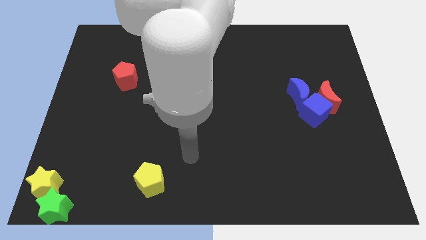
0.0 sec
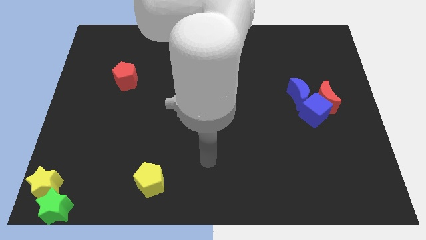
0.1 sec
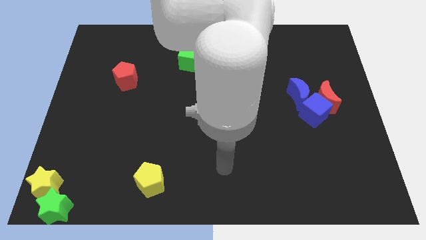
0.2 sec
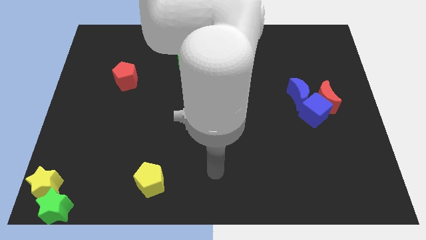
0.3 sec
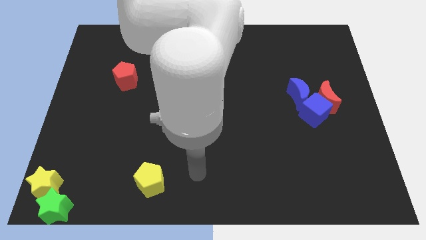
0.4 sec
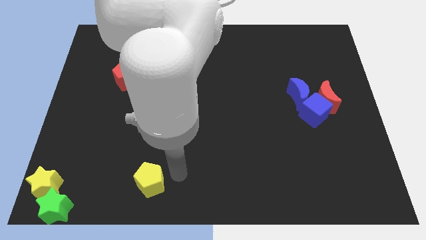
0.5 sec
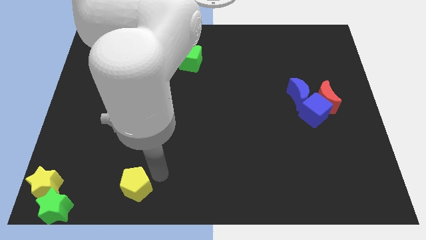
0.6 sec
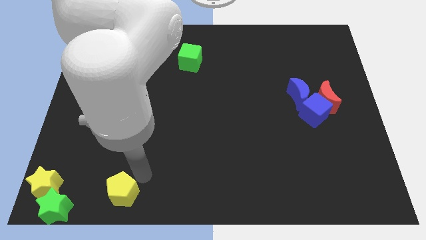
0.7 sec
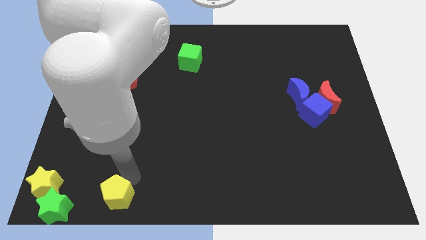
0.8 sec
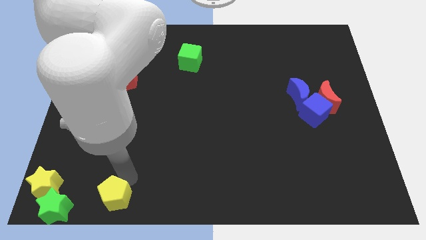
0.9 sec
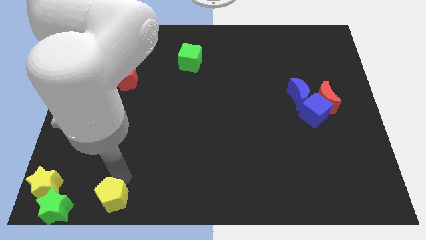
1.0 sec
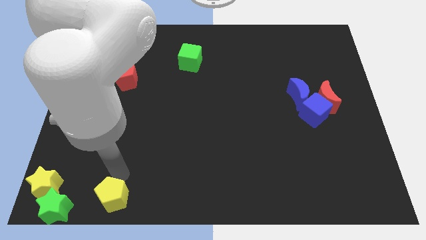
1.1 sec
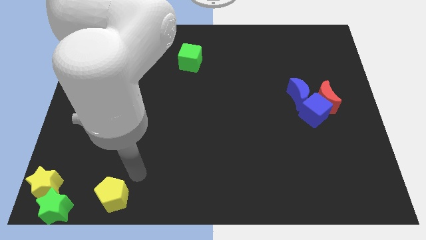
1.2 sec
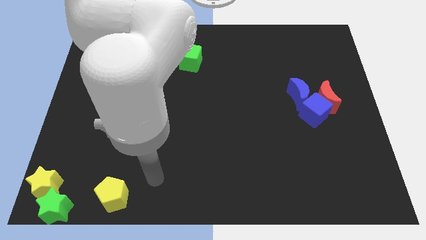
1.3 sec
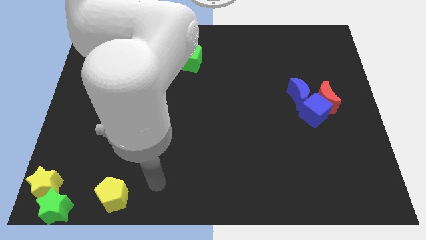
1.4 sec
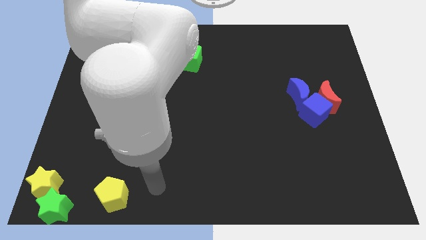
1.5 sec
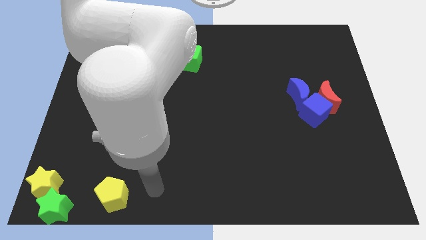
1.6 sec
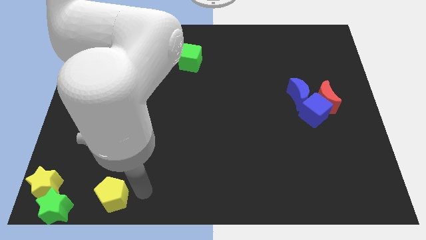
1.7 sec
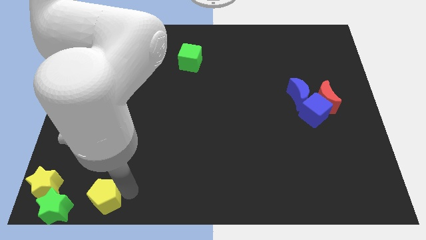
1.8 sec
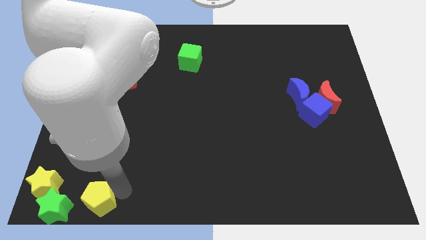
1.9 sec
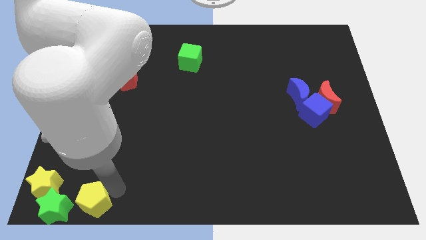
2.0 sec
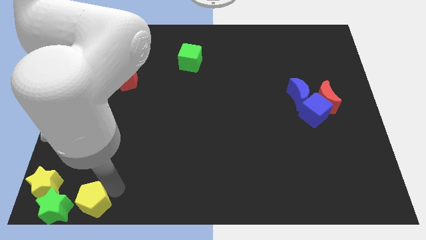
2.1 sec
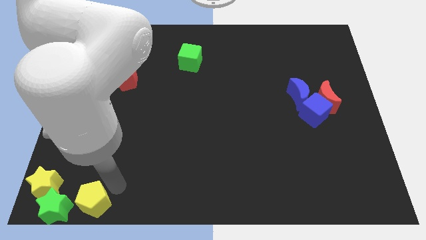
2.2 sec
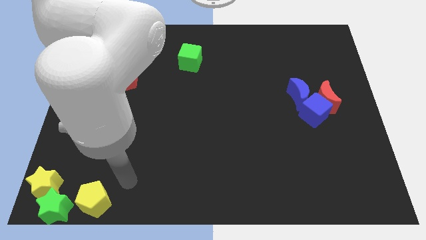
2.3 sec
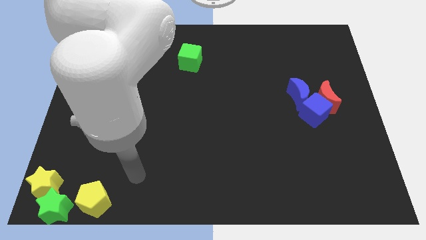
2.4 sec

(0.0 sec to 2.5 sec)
move the yellow pentagon to the right of green star

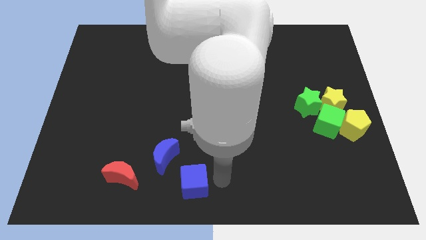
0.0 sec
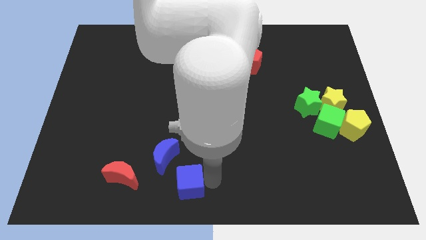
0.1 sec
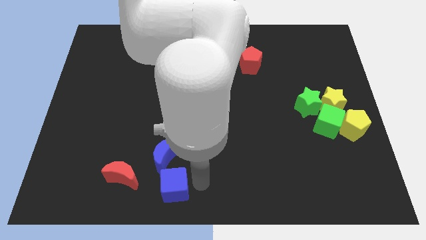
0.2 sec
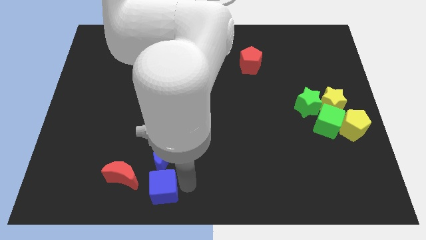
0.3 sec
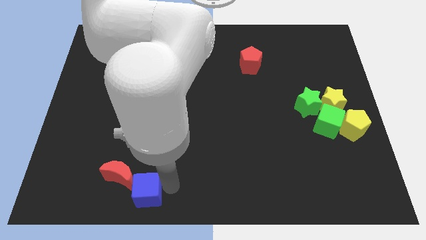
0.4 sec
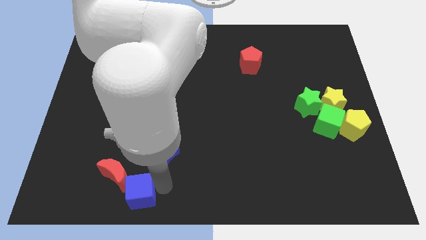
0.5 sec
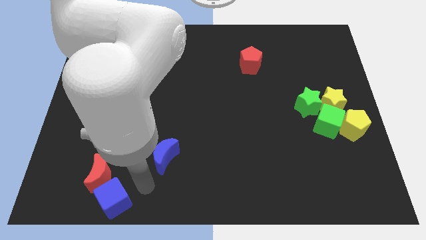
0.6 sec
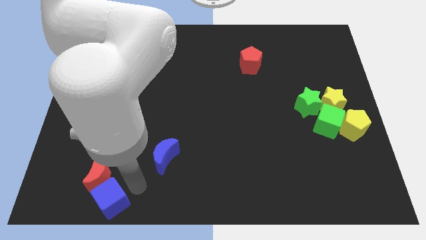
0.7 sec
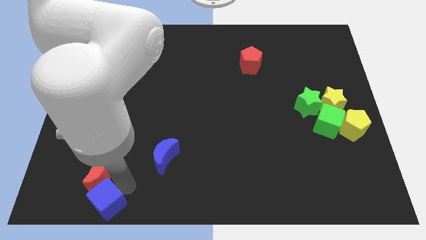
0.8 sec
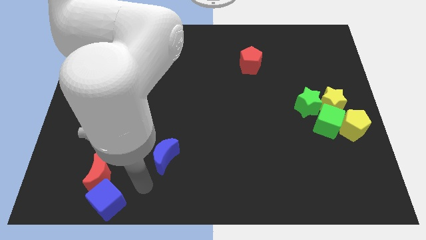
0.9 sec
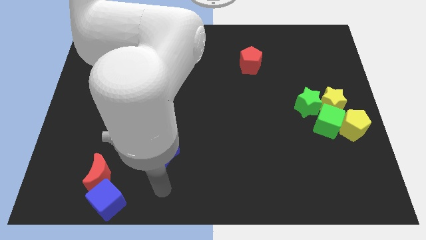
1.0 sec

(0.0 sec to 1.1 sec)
place the blue cube below the red crescent

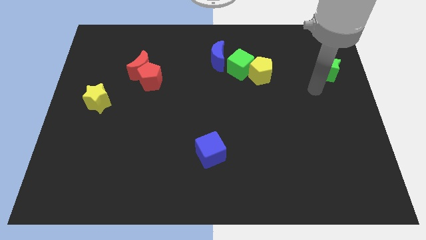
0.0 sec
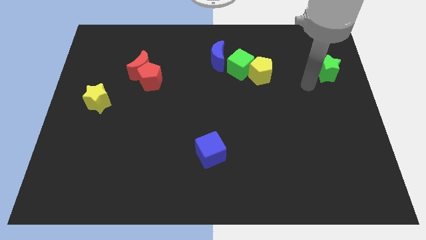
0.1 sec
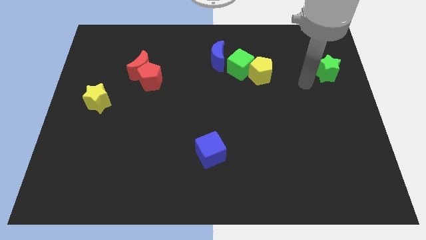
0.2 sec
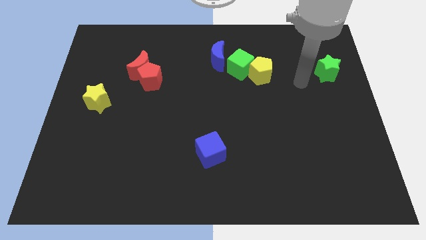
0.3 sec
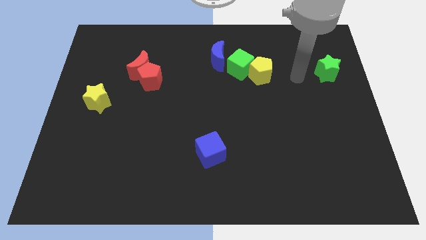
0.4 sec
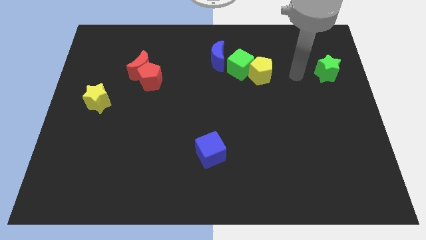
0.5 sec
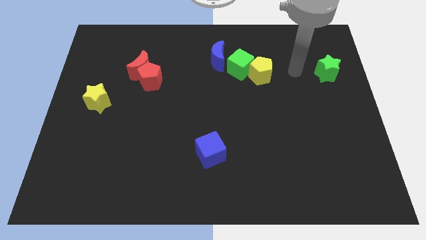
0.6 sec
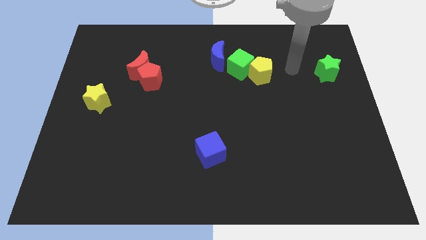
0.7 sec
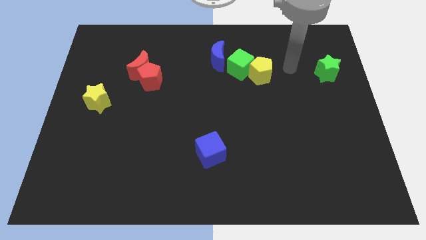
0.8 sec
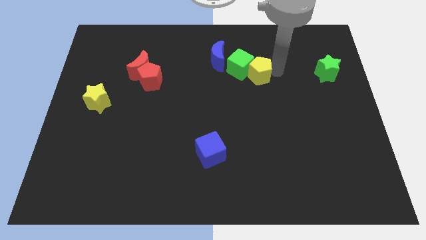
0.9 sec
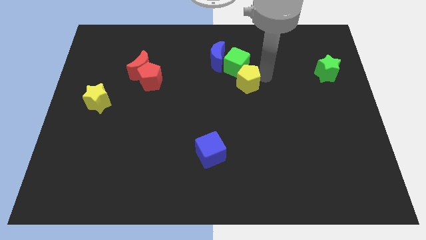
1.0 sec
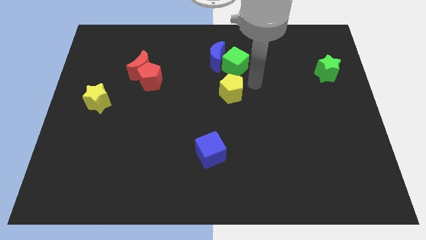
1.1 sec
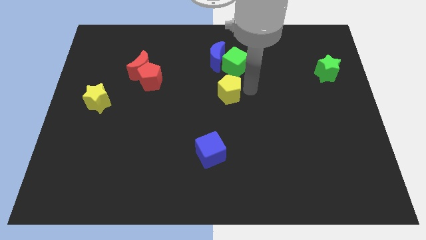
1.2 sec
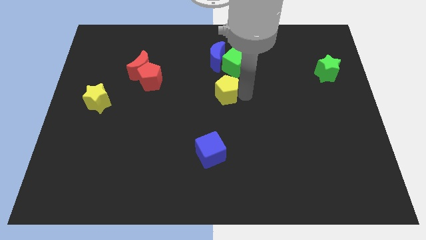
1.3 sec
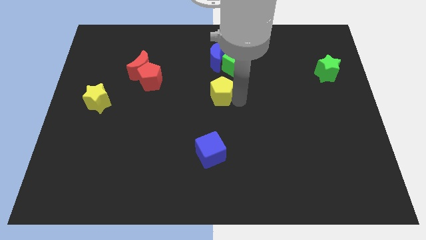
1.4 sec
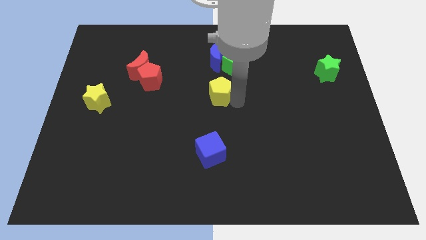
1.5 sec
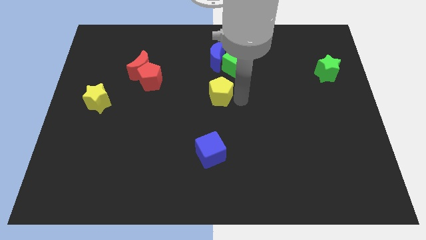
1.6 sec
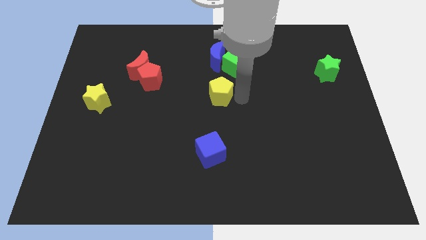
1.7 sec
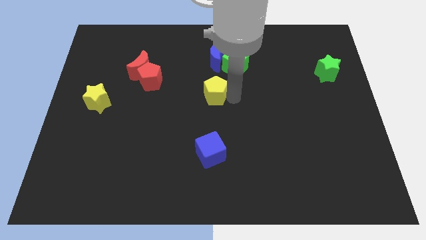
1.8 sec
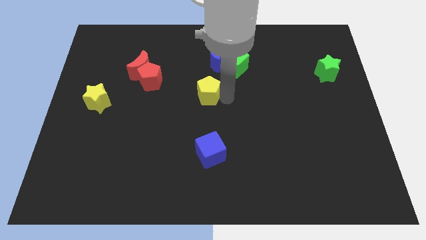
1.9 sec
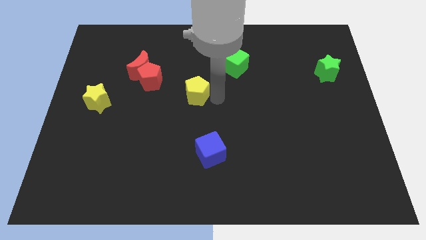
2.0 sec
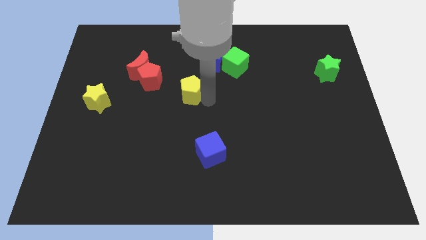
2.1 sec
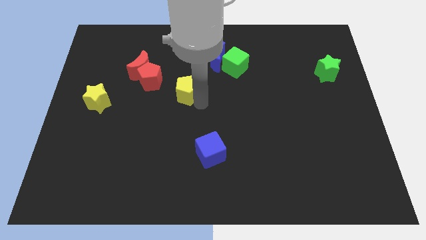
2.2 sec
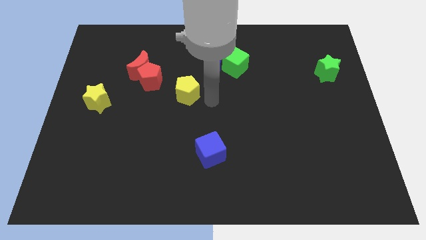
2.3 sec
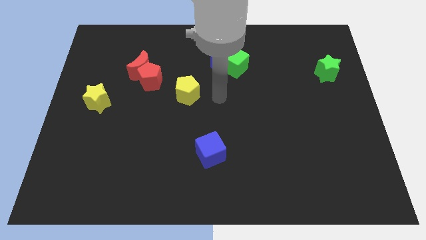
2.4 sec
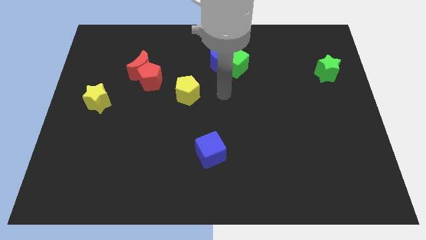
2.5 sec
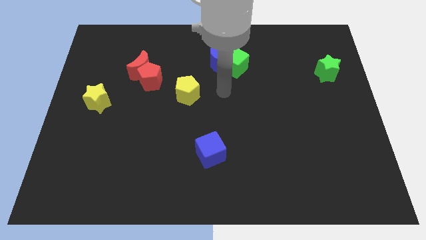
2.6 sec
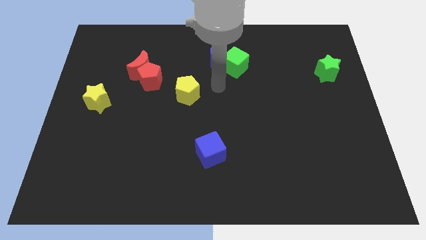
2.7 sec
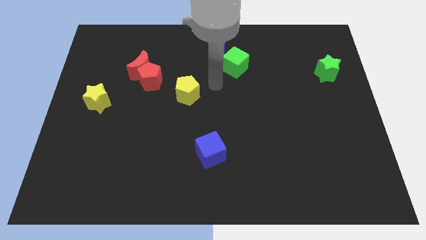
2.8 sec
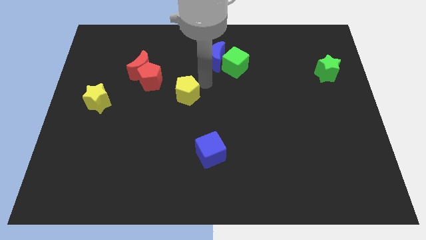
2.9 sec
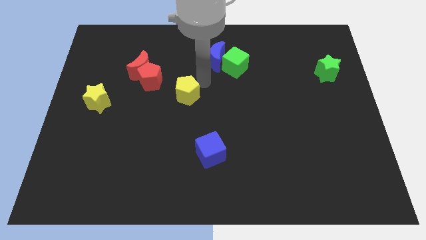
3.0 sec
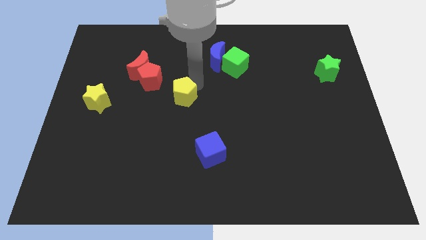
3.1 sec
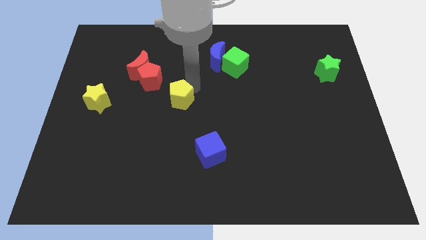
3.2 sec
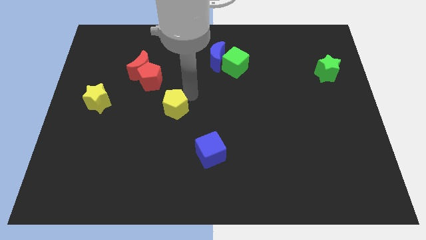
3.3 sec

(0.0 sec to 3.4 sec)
push the yellow pentagon at the bottom right side of the group of red blocks

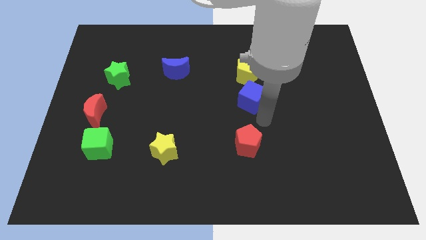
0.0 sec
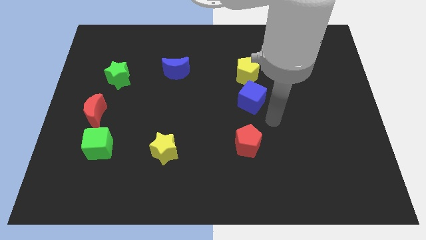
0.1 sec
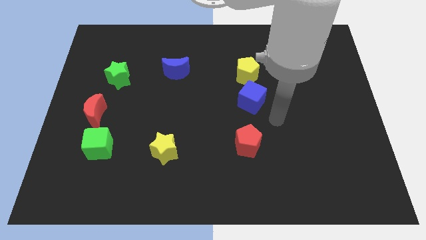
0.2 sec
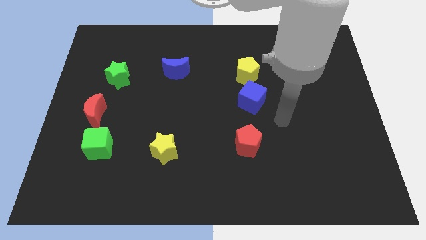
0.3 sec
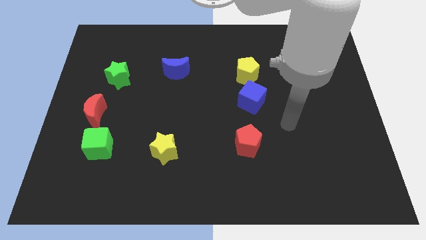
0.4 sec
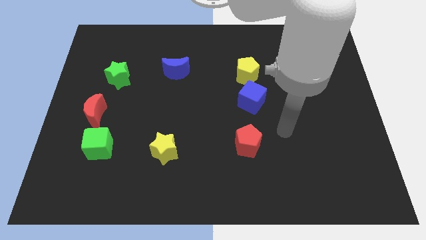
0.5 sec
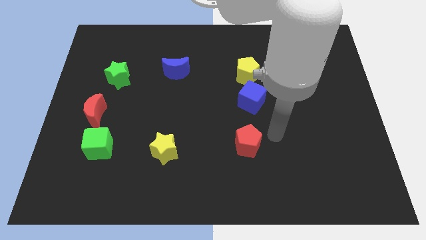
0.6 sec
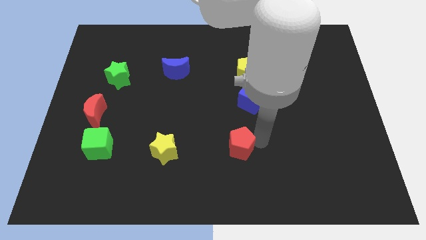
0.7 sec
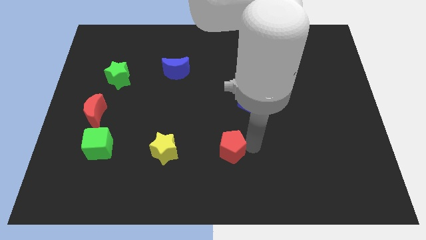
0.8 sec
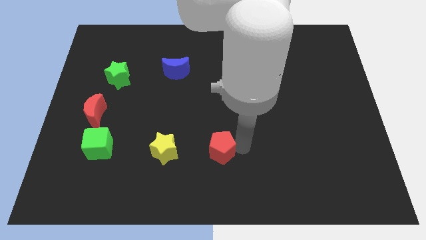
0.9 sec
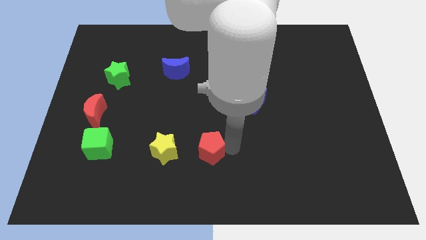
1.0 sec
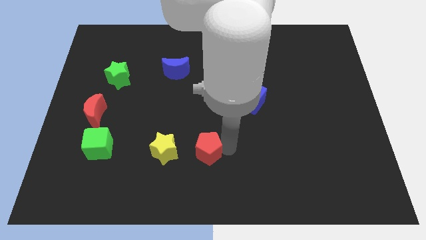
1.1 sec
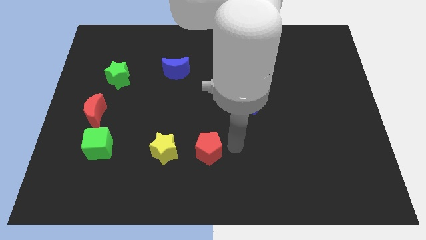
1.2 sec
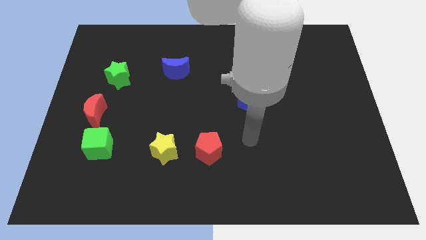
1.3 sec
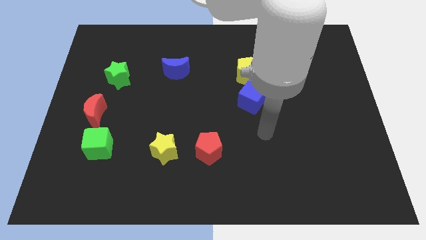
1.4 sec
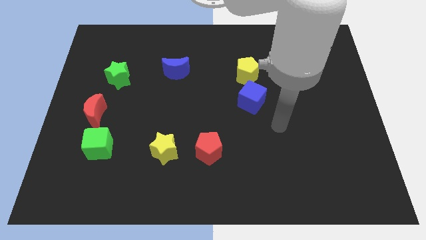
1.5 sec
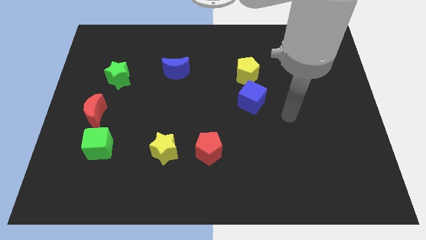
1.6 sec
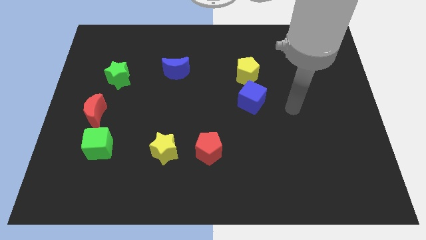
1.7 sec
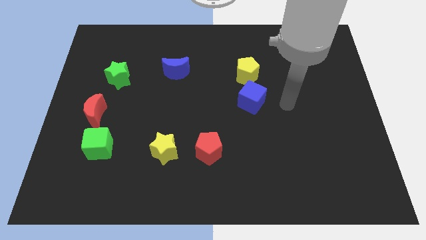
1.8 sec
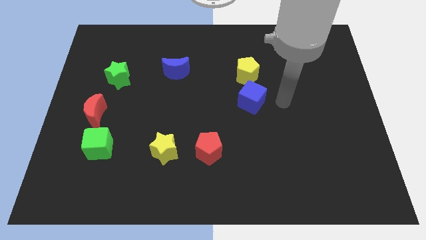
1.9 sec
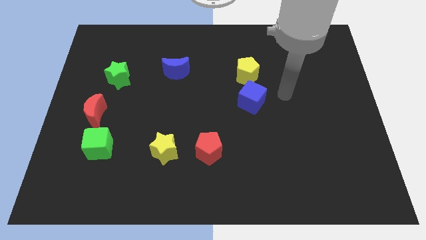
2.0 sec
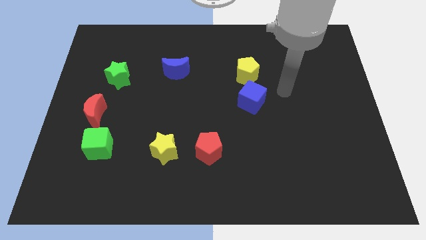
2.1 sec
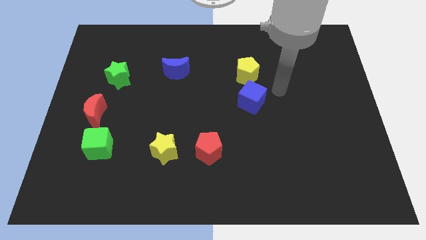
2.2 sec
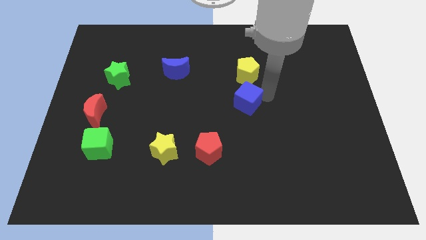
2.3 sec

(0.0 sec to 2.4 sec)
move the red pentagon close to the yellow star
